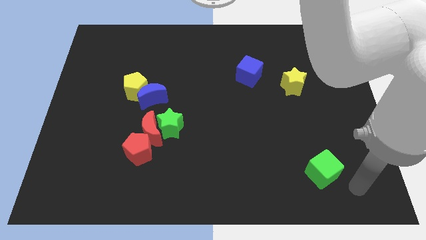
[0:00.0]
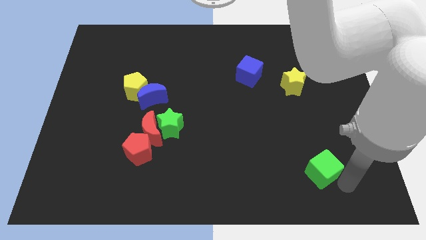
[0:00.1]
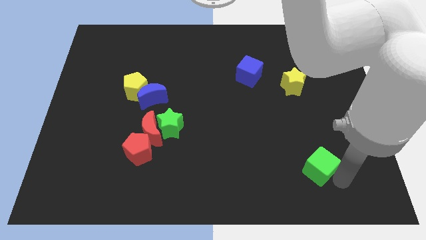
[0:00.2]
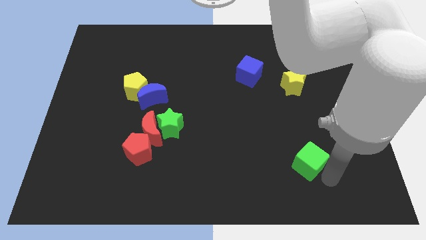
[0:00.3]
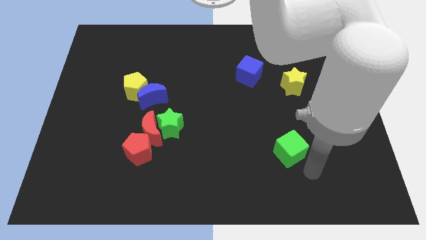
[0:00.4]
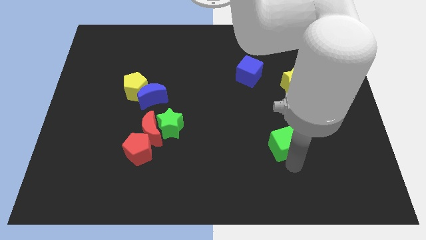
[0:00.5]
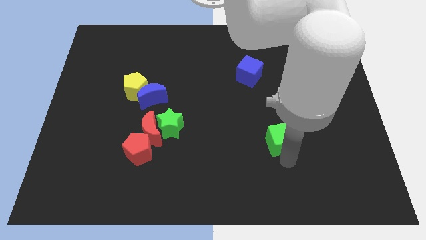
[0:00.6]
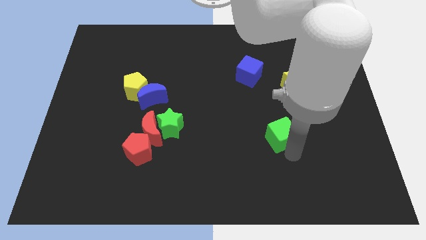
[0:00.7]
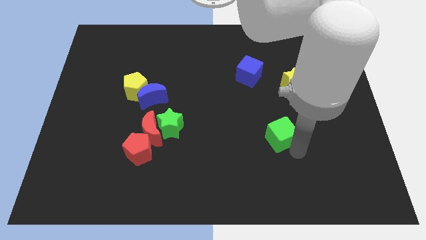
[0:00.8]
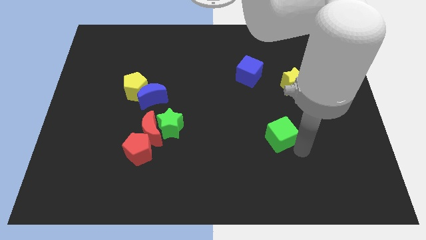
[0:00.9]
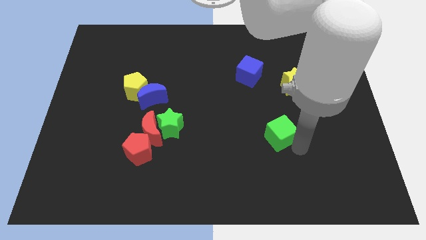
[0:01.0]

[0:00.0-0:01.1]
push the green cube to the top of the board

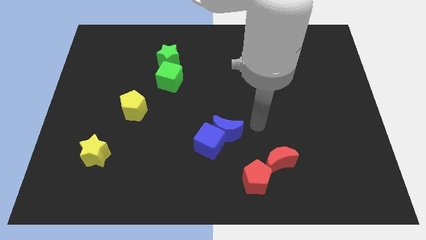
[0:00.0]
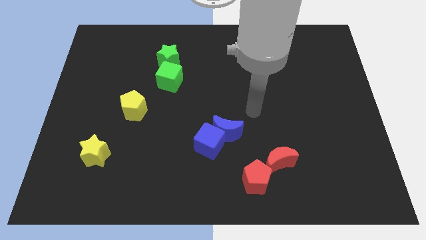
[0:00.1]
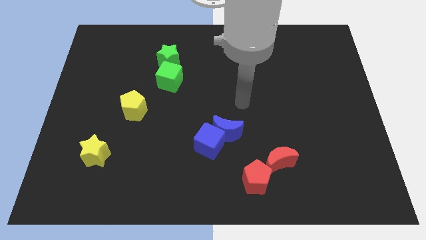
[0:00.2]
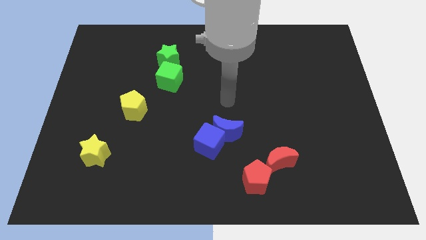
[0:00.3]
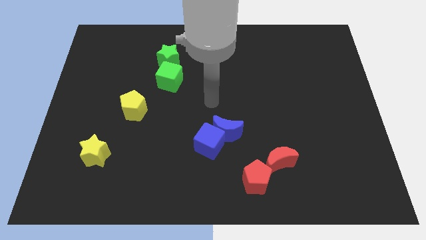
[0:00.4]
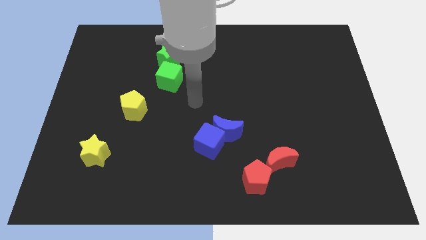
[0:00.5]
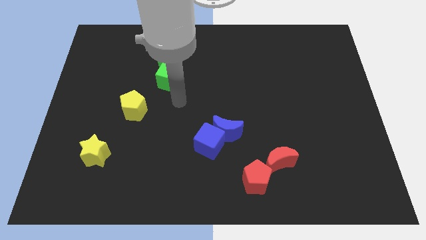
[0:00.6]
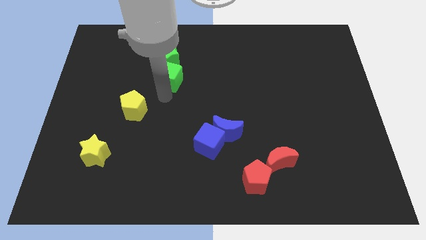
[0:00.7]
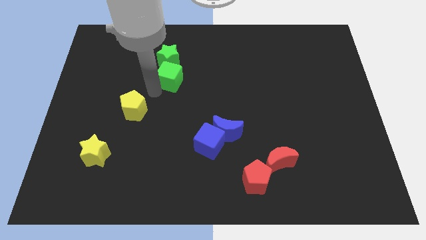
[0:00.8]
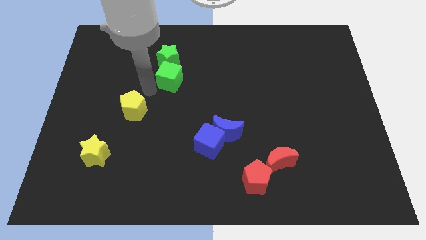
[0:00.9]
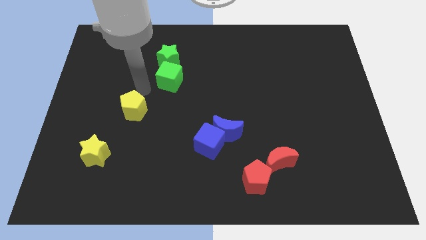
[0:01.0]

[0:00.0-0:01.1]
move arm to the green cube

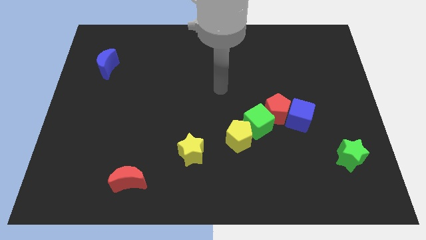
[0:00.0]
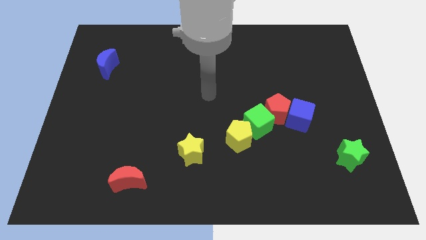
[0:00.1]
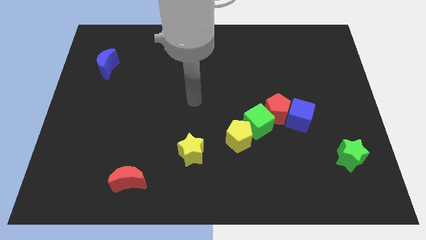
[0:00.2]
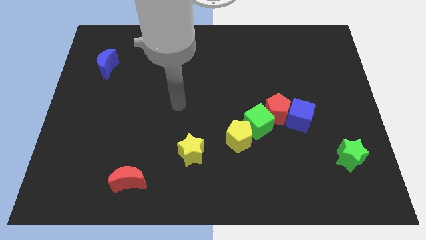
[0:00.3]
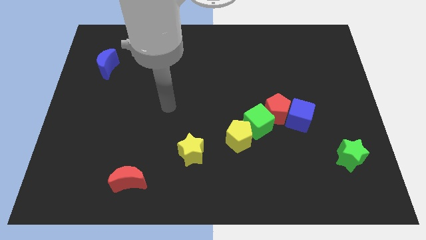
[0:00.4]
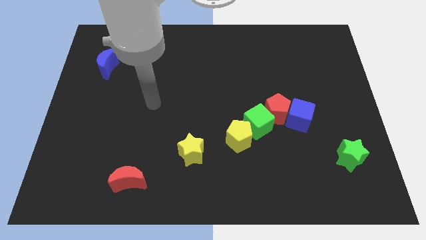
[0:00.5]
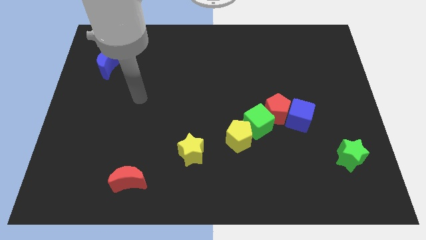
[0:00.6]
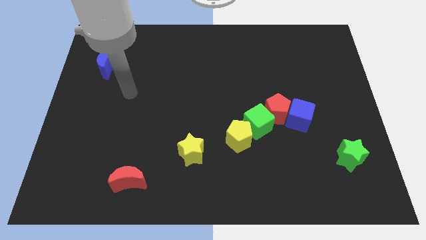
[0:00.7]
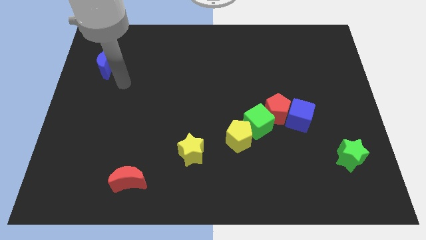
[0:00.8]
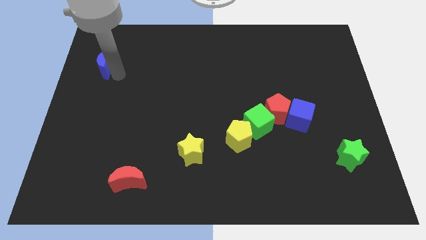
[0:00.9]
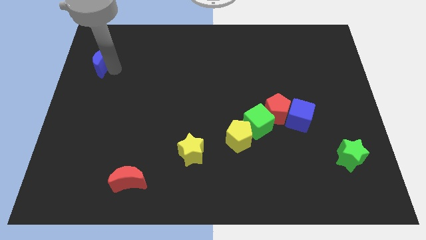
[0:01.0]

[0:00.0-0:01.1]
go and tap the right side of the blue crescent

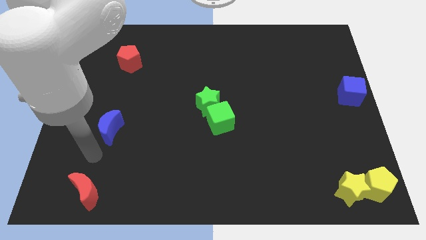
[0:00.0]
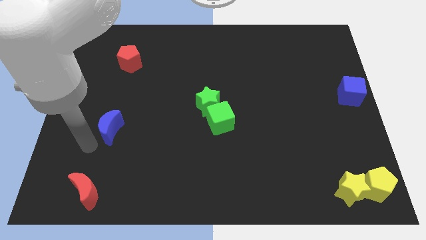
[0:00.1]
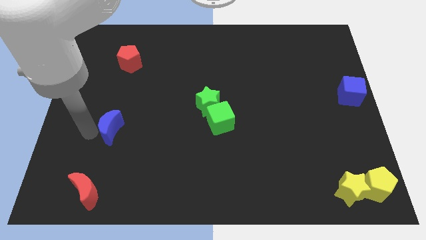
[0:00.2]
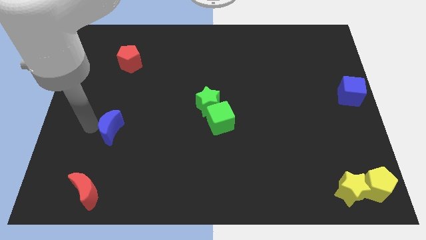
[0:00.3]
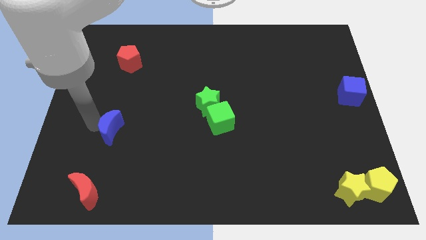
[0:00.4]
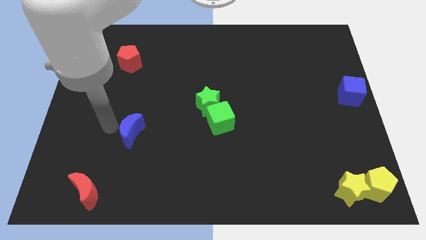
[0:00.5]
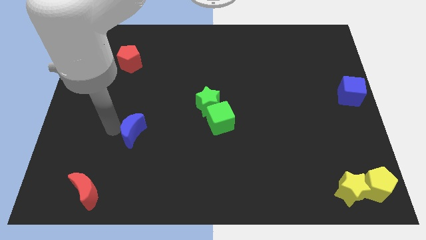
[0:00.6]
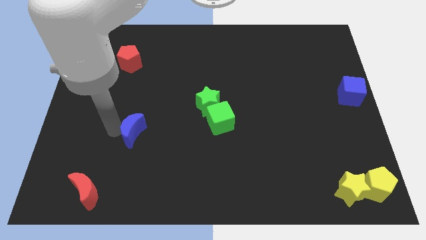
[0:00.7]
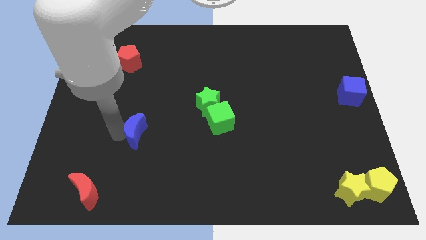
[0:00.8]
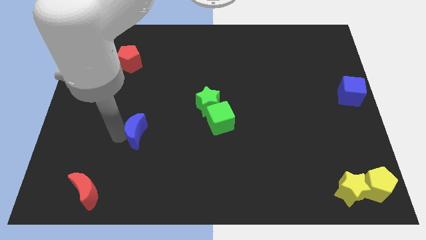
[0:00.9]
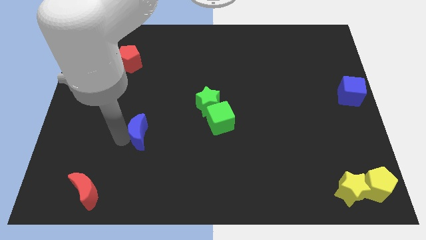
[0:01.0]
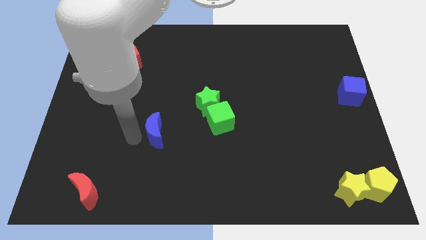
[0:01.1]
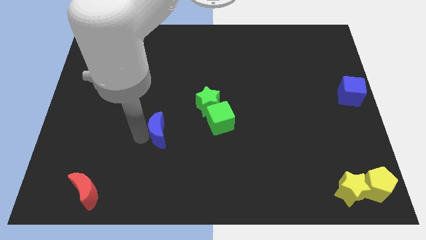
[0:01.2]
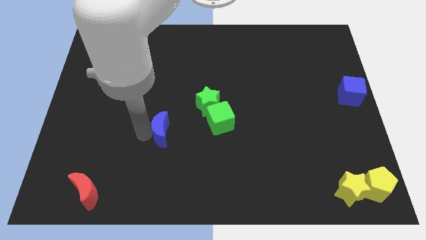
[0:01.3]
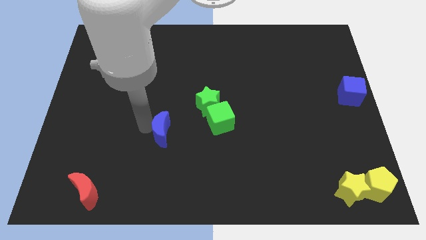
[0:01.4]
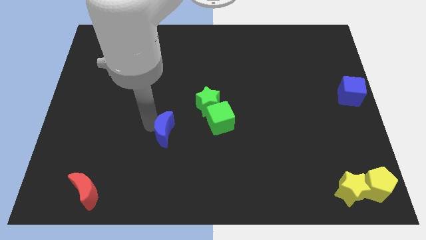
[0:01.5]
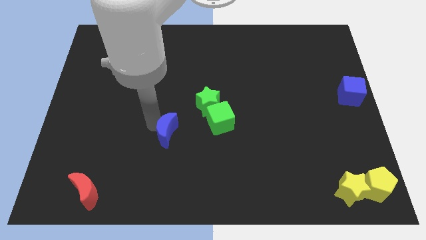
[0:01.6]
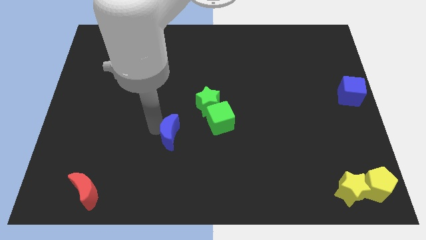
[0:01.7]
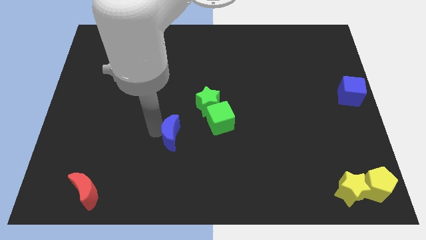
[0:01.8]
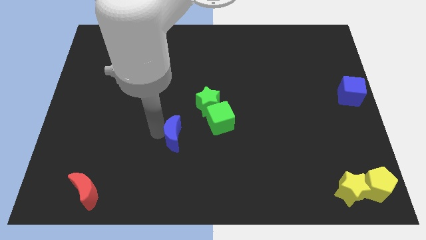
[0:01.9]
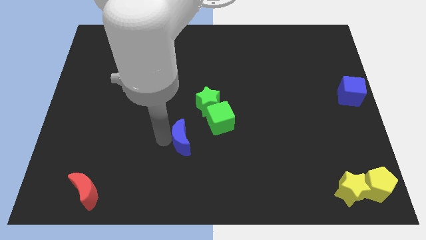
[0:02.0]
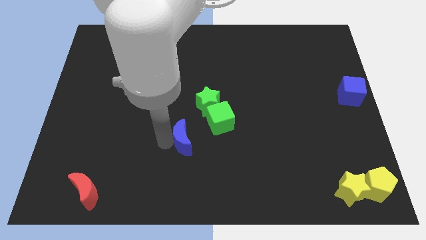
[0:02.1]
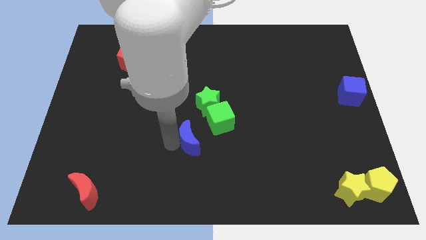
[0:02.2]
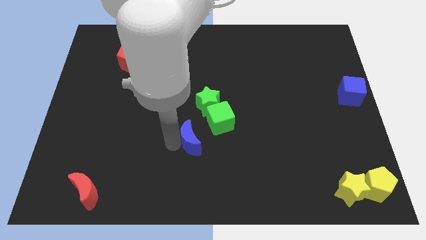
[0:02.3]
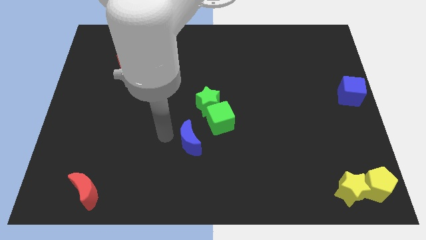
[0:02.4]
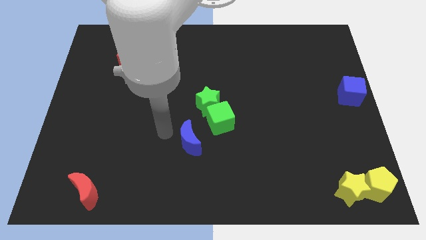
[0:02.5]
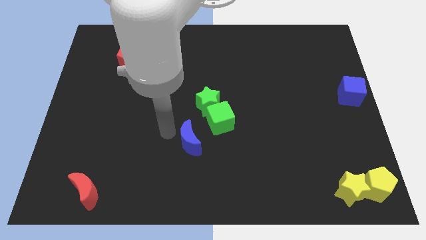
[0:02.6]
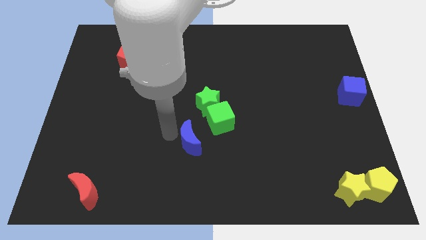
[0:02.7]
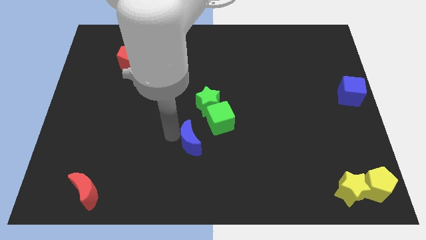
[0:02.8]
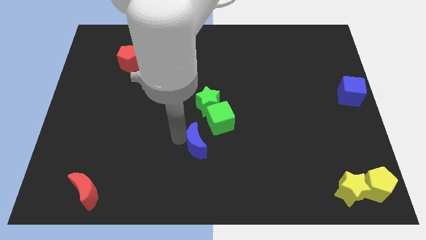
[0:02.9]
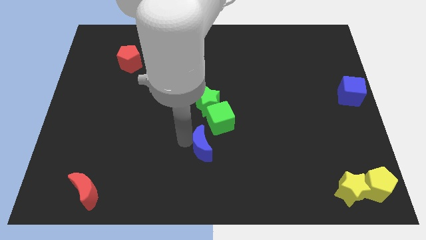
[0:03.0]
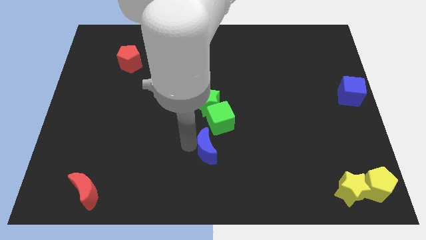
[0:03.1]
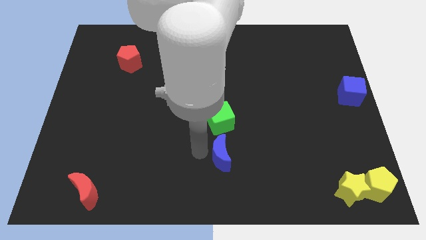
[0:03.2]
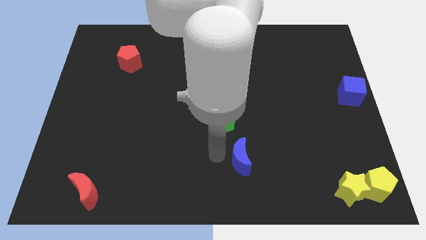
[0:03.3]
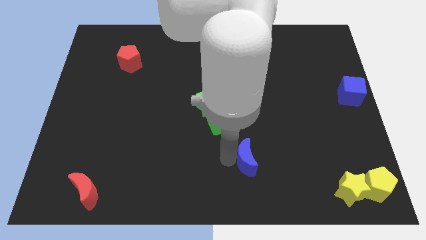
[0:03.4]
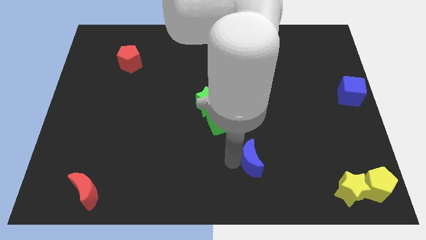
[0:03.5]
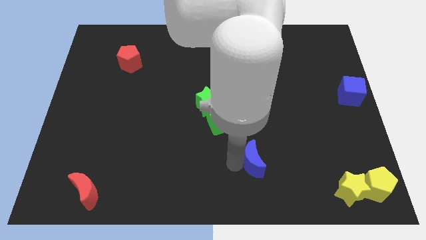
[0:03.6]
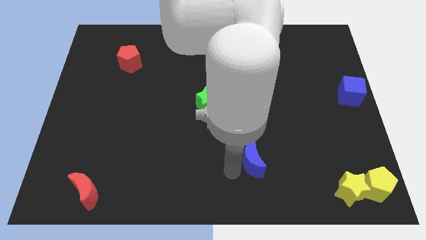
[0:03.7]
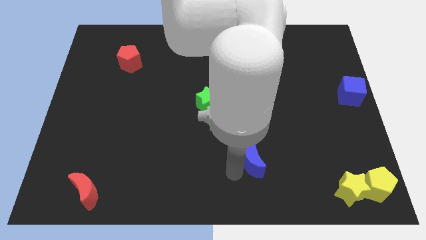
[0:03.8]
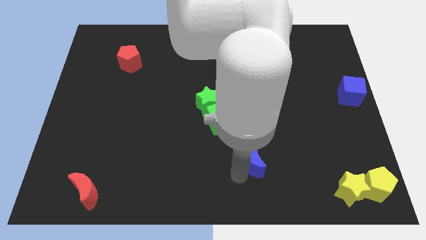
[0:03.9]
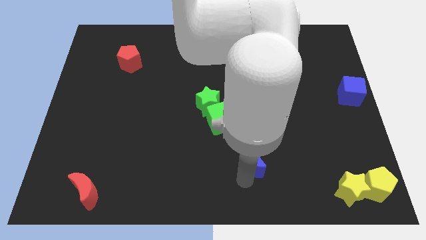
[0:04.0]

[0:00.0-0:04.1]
place the blue moon below the green cube

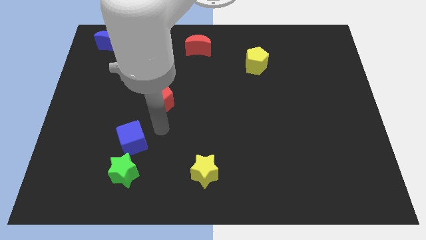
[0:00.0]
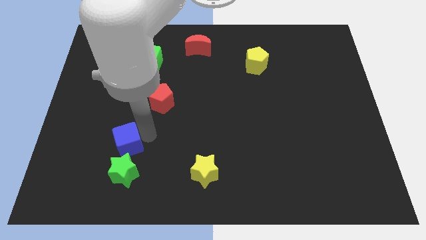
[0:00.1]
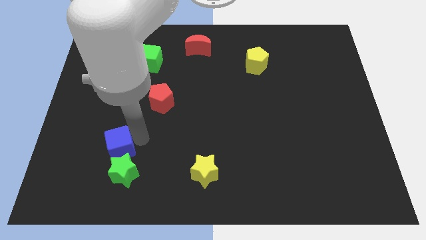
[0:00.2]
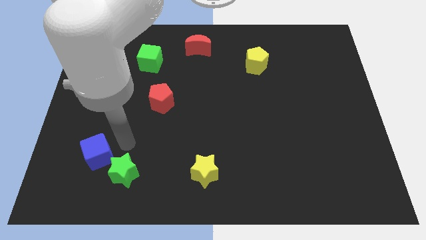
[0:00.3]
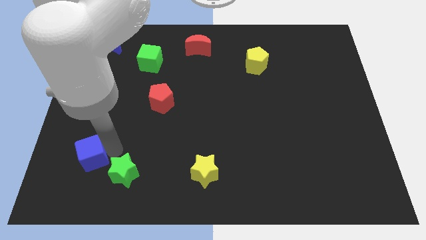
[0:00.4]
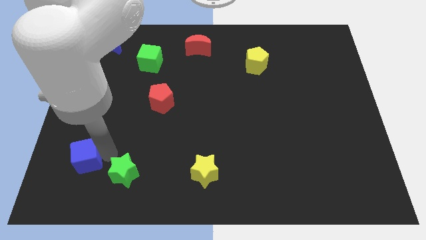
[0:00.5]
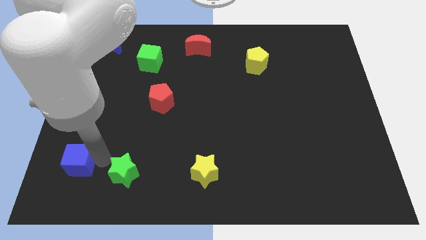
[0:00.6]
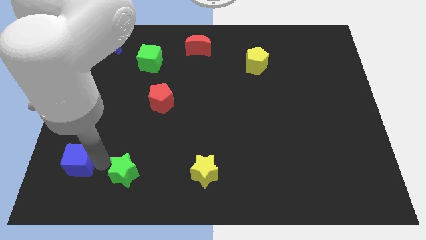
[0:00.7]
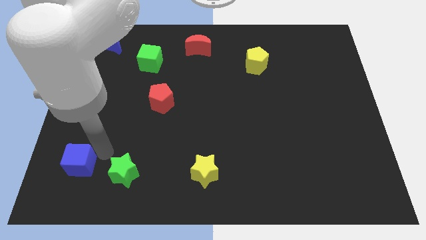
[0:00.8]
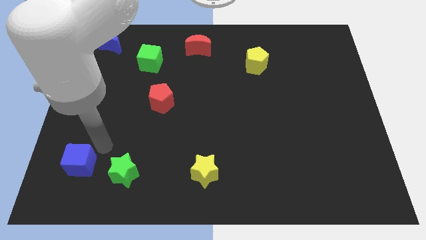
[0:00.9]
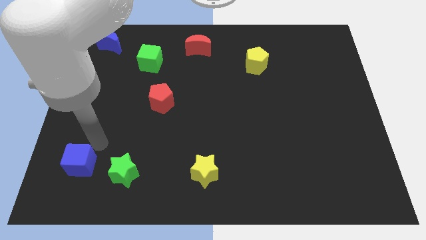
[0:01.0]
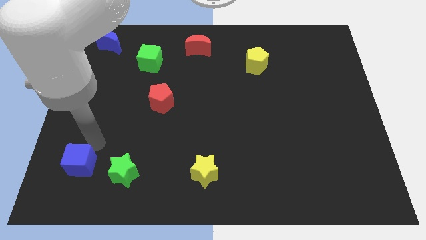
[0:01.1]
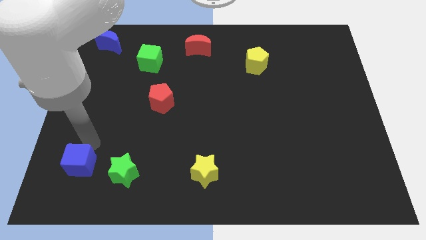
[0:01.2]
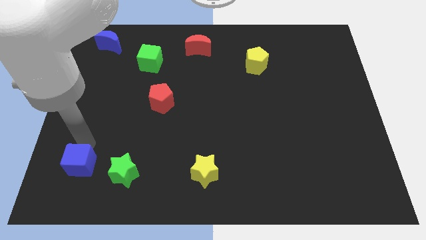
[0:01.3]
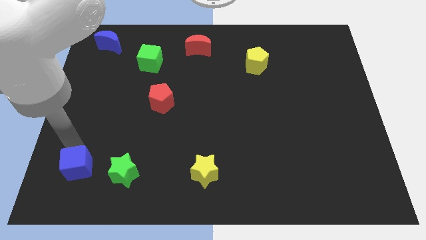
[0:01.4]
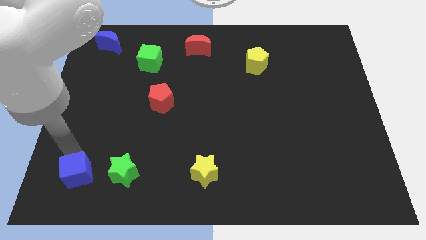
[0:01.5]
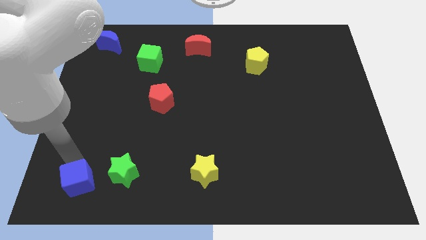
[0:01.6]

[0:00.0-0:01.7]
put the blue cube left to the green star
